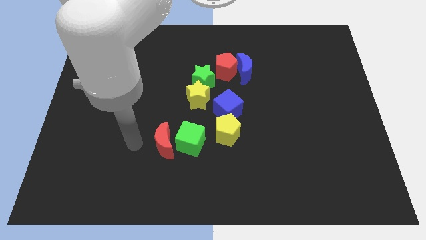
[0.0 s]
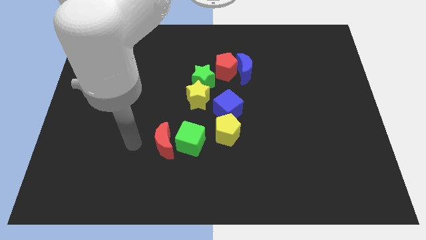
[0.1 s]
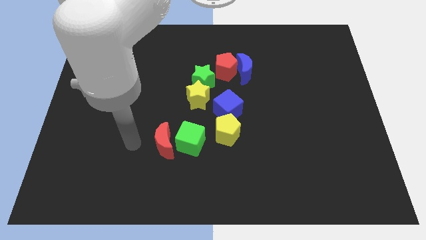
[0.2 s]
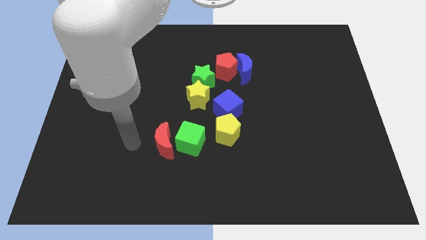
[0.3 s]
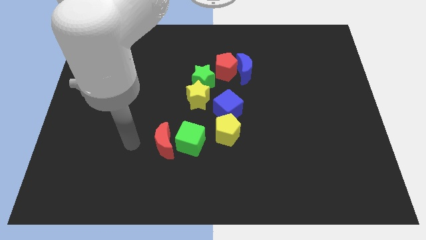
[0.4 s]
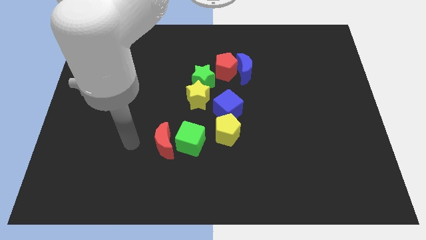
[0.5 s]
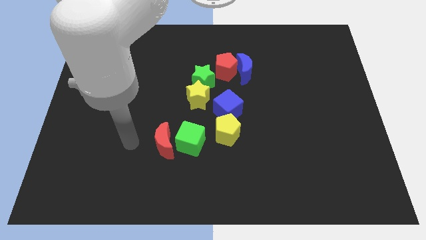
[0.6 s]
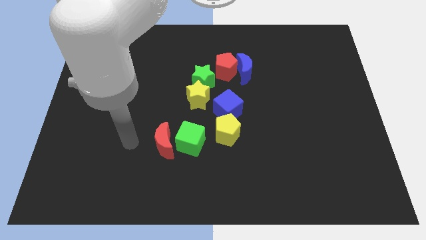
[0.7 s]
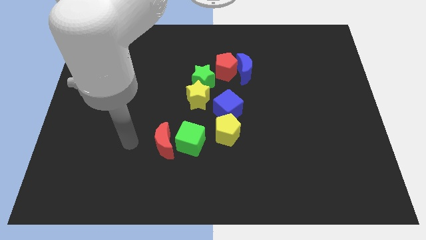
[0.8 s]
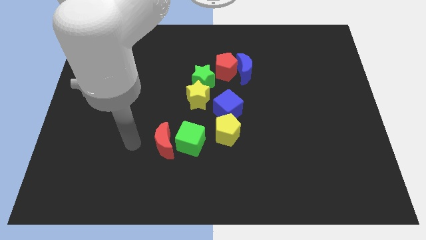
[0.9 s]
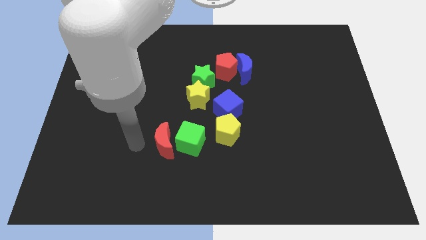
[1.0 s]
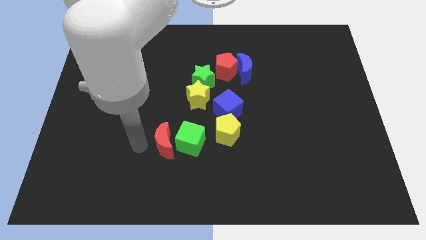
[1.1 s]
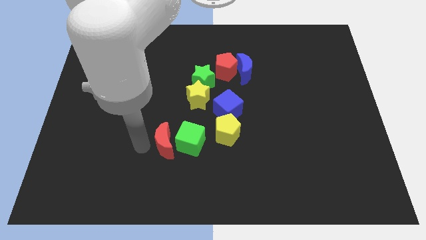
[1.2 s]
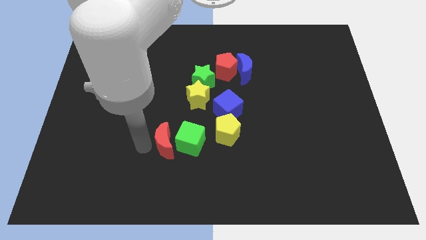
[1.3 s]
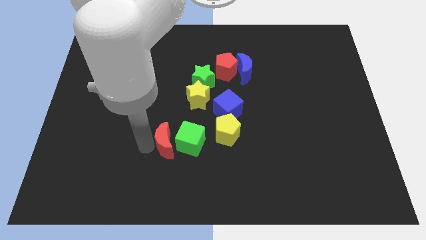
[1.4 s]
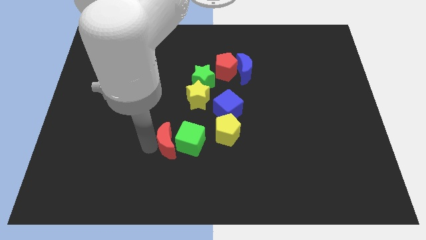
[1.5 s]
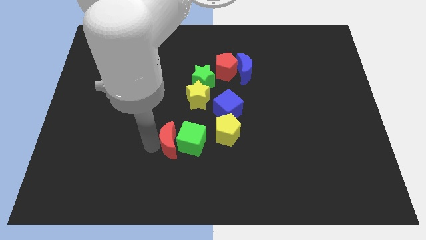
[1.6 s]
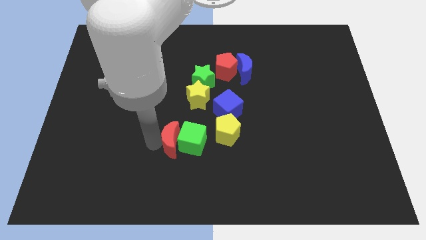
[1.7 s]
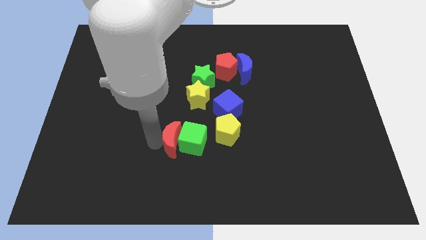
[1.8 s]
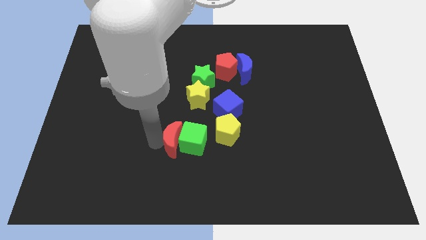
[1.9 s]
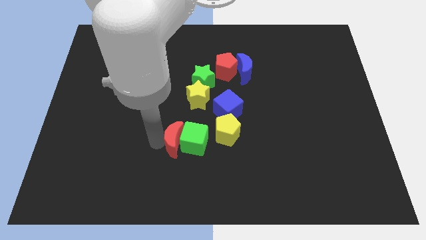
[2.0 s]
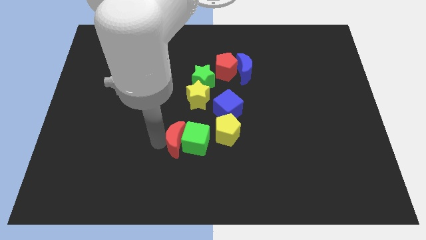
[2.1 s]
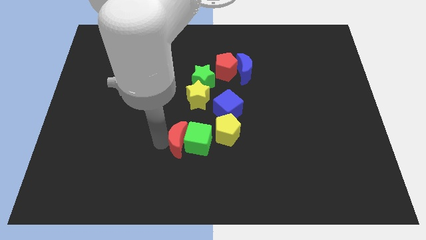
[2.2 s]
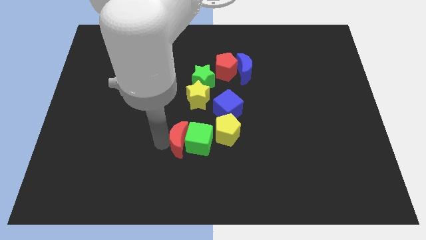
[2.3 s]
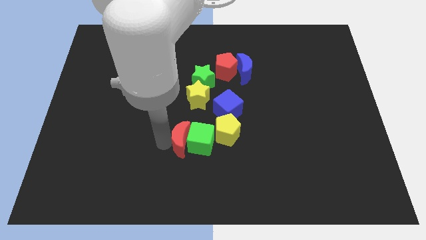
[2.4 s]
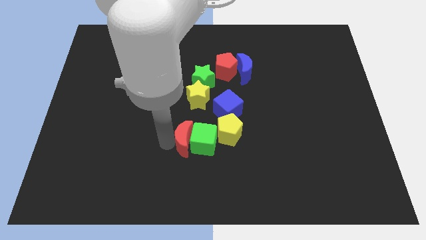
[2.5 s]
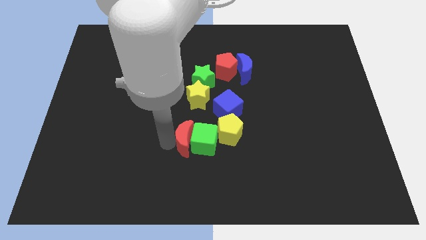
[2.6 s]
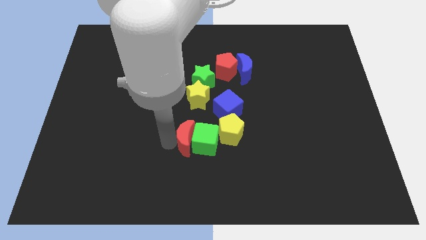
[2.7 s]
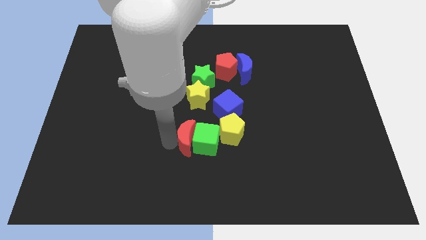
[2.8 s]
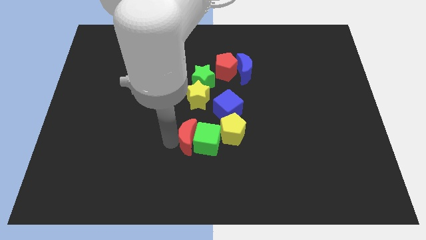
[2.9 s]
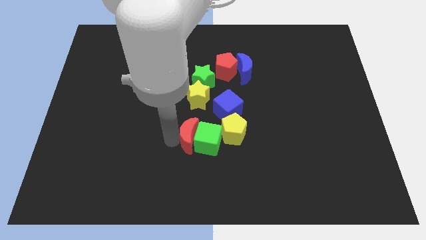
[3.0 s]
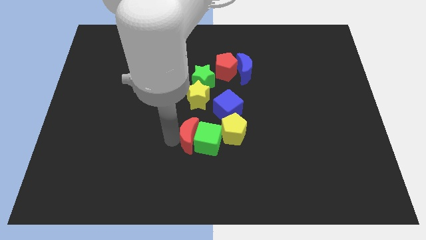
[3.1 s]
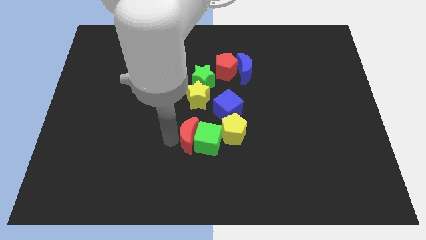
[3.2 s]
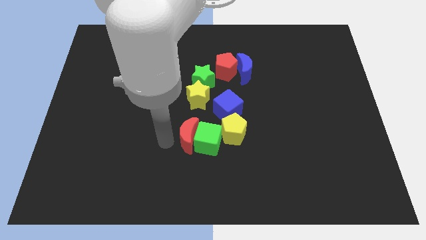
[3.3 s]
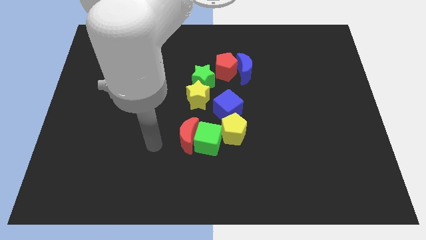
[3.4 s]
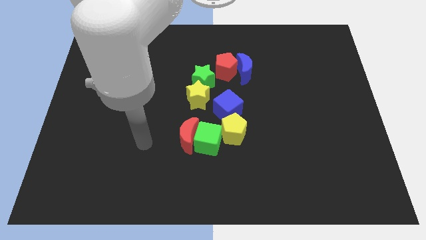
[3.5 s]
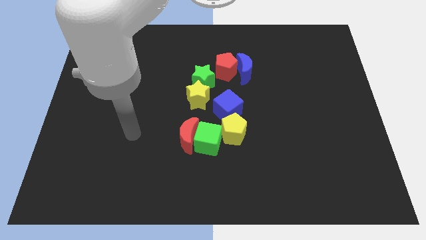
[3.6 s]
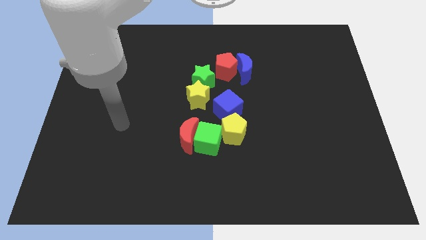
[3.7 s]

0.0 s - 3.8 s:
push the red crescent into the green cube

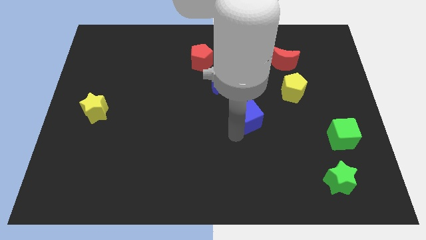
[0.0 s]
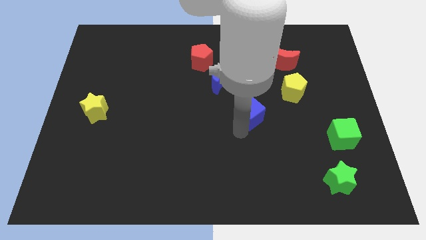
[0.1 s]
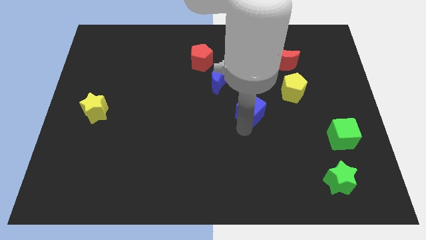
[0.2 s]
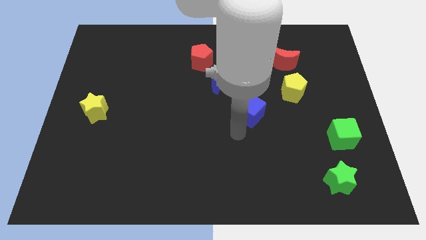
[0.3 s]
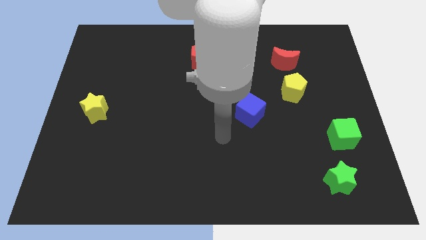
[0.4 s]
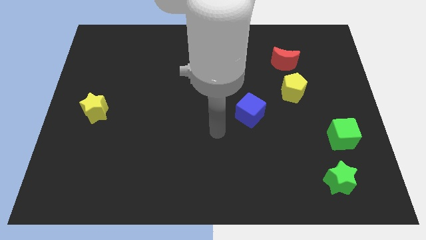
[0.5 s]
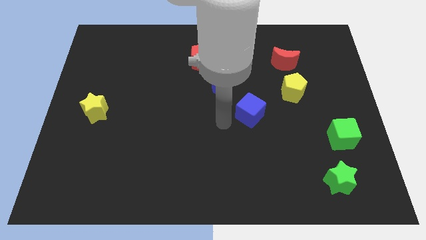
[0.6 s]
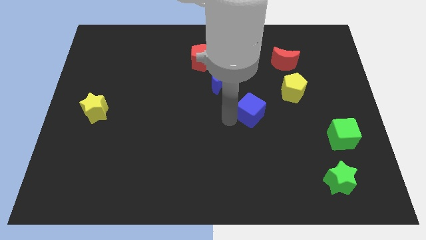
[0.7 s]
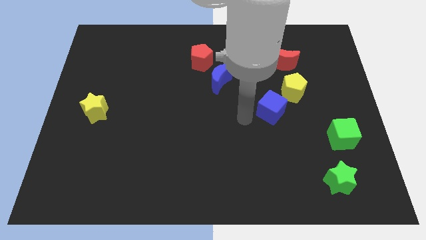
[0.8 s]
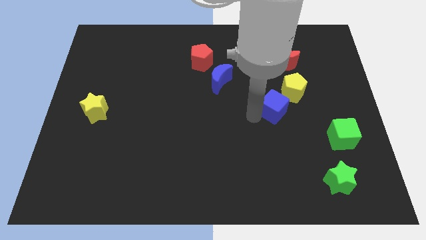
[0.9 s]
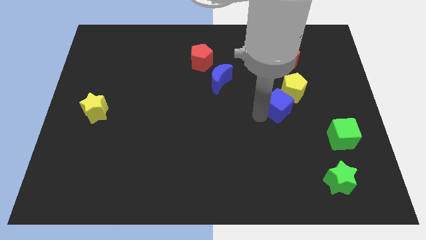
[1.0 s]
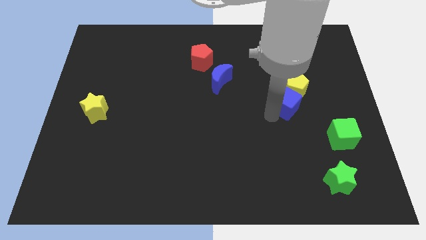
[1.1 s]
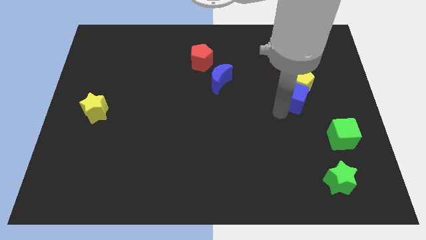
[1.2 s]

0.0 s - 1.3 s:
push the blue cube into yellow pentagon

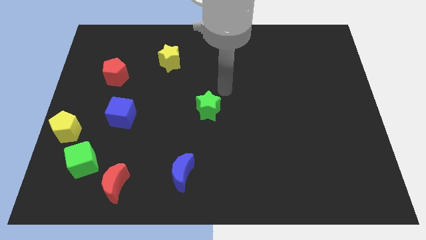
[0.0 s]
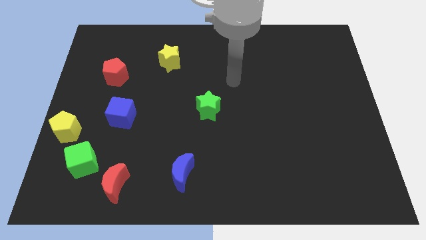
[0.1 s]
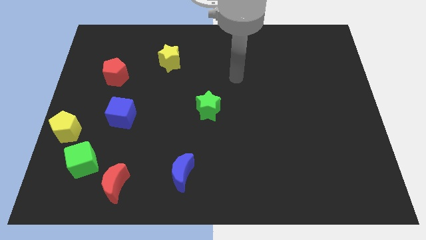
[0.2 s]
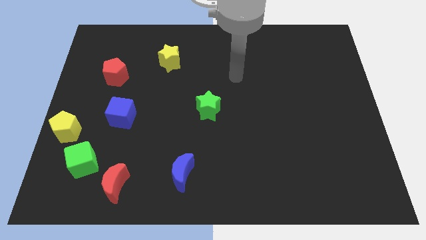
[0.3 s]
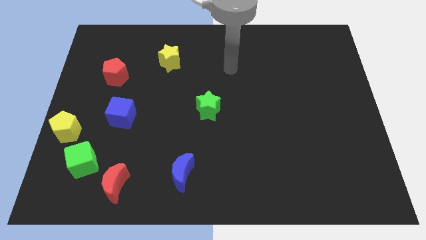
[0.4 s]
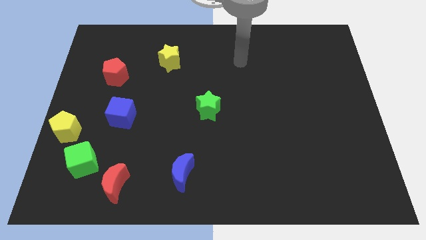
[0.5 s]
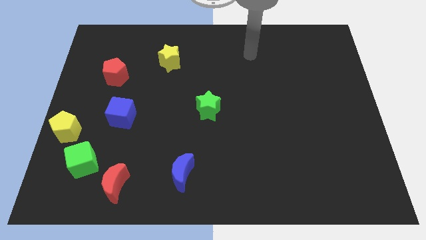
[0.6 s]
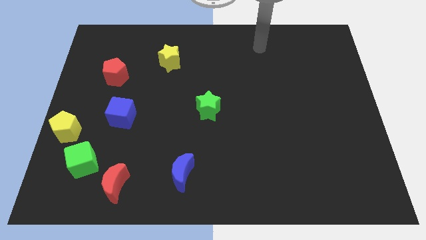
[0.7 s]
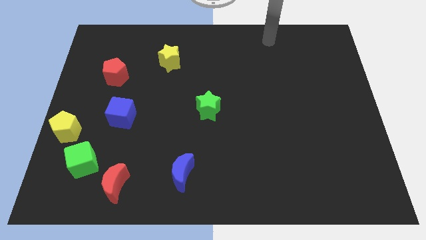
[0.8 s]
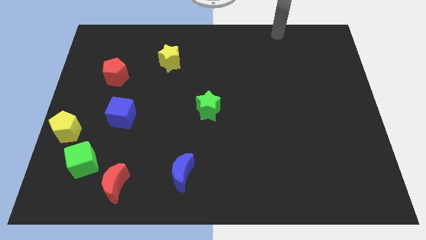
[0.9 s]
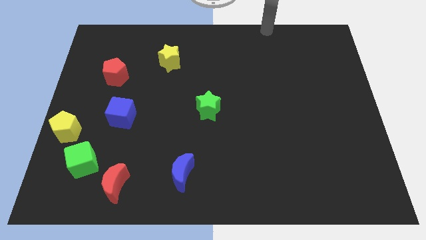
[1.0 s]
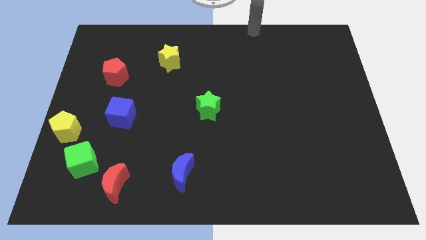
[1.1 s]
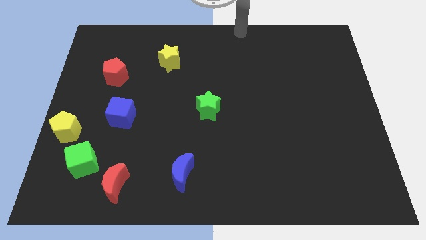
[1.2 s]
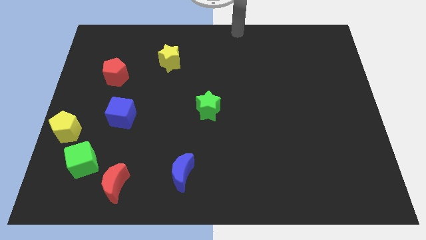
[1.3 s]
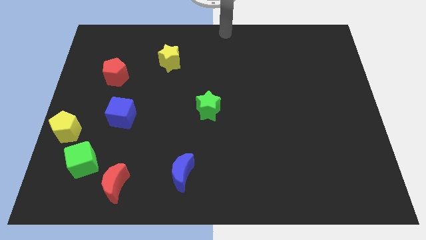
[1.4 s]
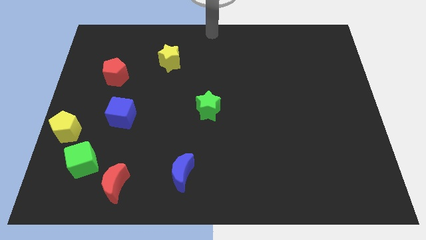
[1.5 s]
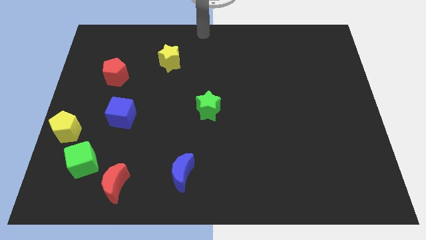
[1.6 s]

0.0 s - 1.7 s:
point your arm at the top center of the board

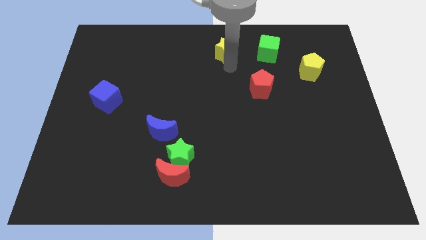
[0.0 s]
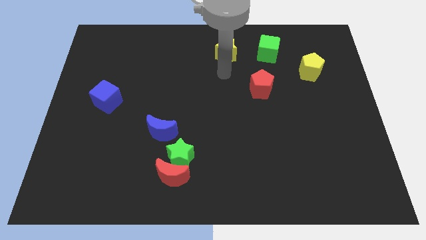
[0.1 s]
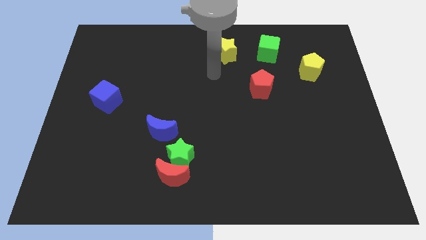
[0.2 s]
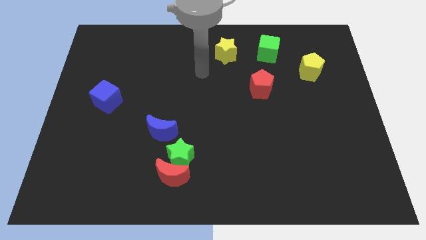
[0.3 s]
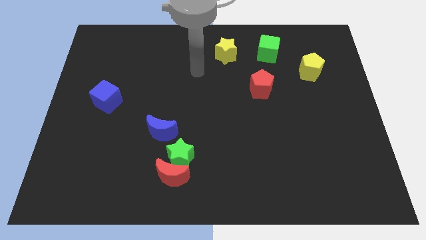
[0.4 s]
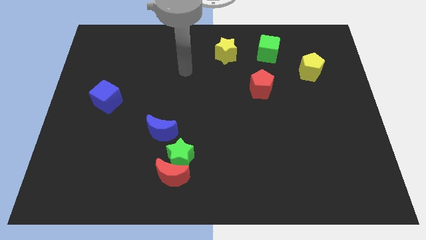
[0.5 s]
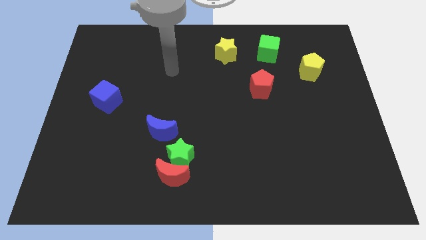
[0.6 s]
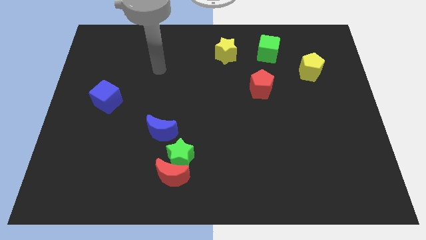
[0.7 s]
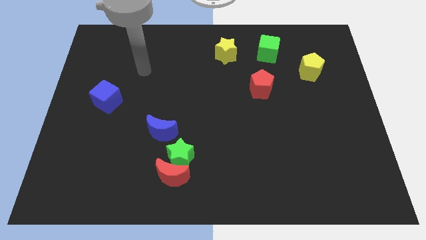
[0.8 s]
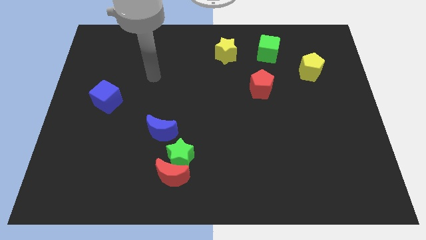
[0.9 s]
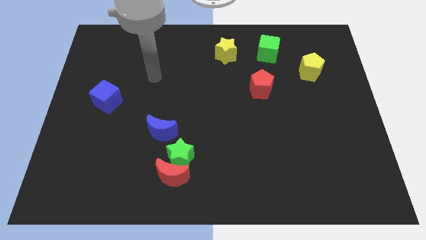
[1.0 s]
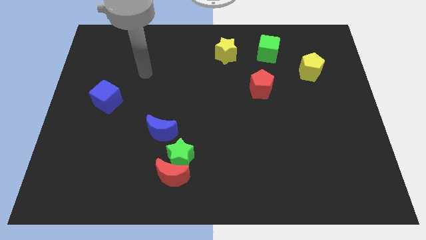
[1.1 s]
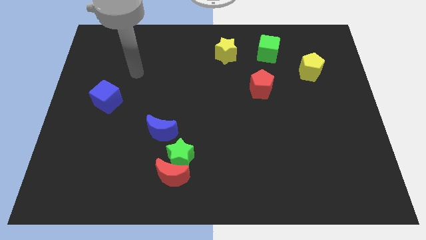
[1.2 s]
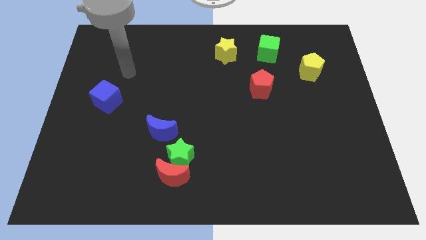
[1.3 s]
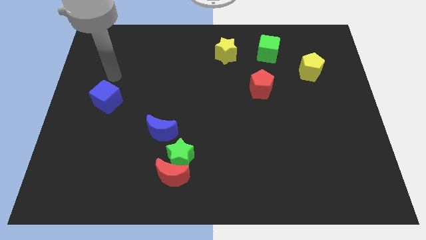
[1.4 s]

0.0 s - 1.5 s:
move away from the yellow star

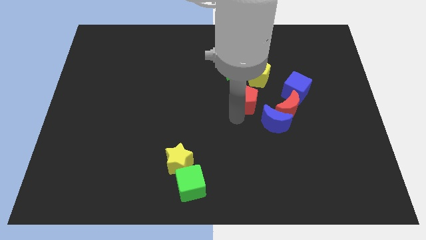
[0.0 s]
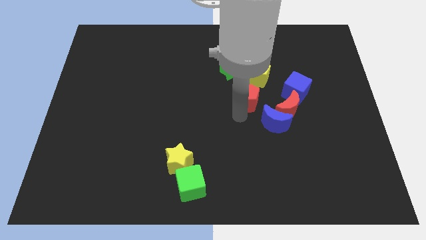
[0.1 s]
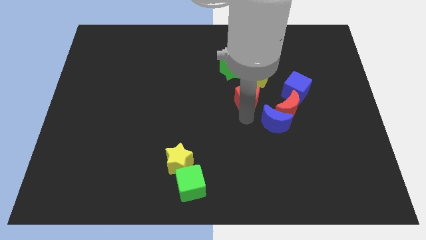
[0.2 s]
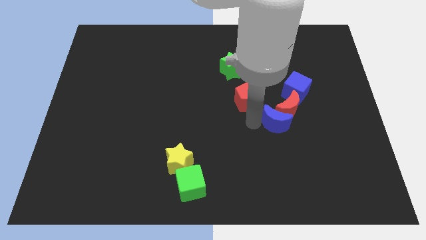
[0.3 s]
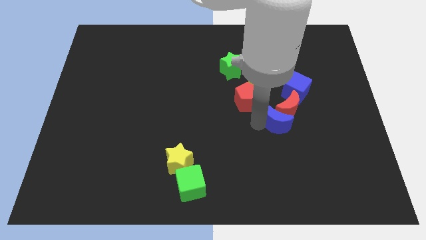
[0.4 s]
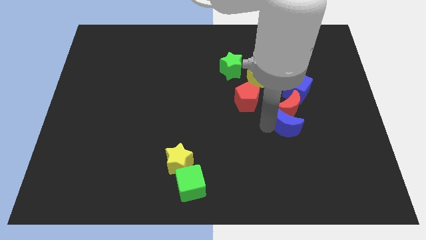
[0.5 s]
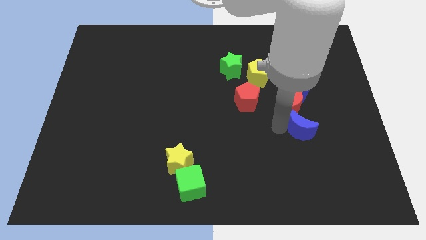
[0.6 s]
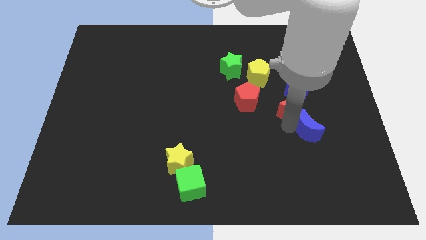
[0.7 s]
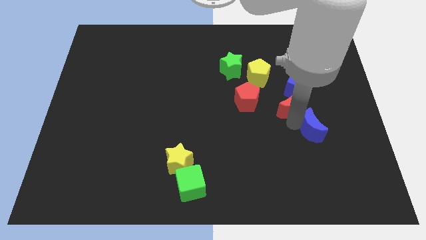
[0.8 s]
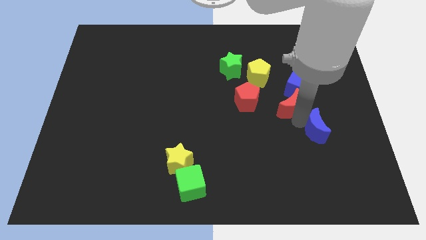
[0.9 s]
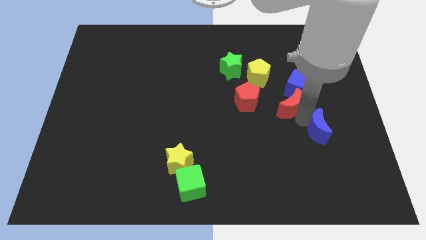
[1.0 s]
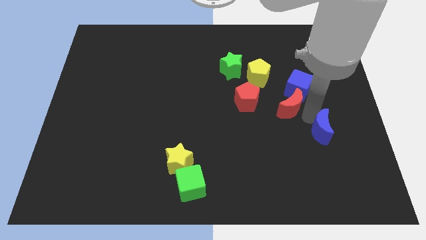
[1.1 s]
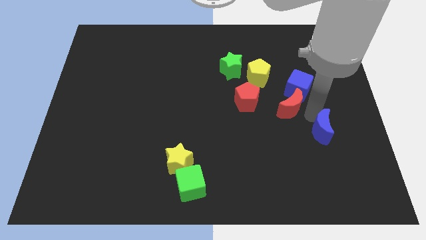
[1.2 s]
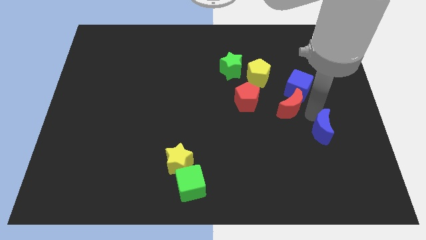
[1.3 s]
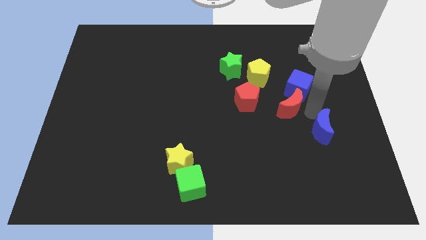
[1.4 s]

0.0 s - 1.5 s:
separate the blue crescent from the red moon
